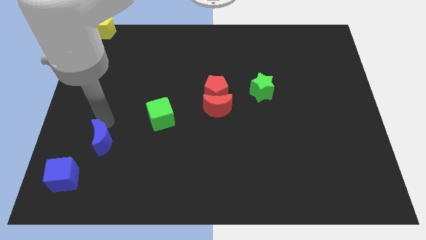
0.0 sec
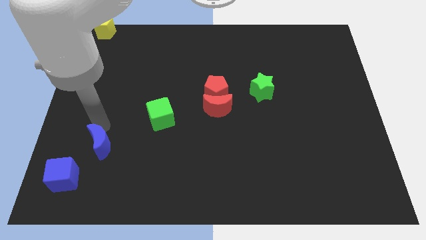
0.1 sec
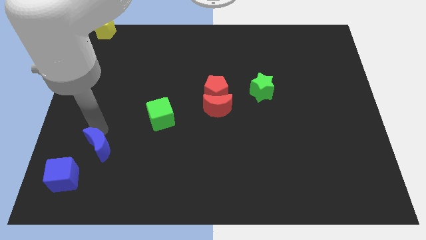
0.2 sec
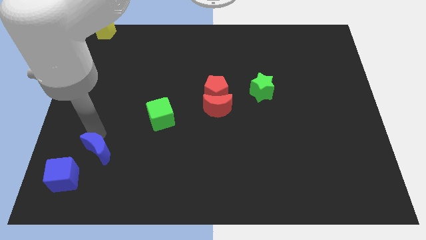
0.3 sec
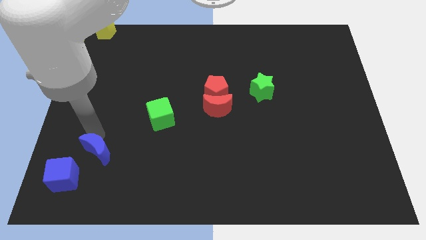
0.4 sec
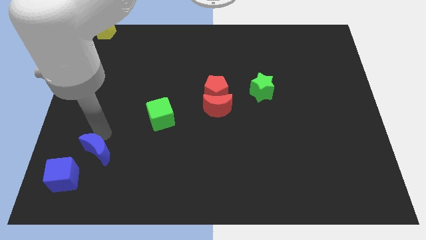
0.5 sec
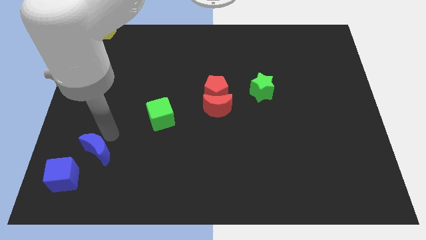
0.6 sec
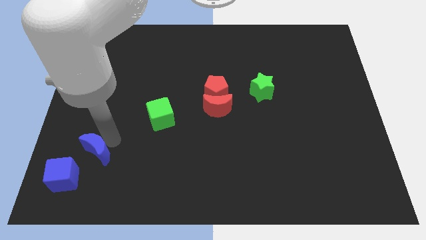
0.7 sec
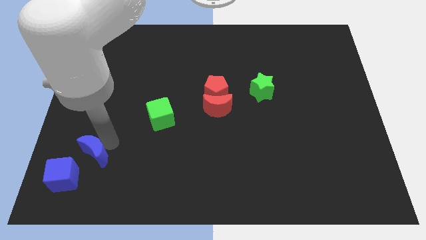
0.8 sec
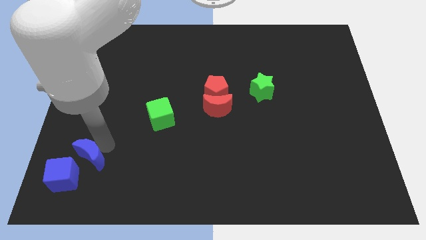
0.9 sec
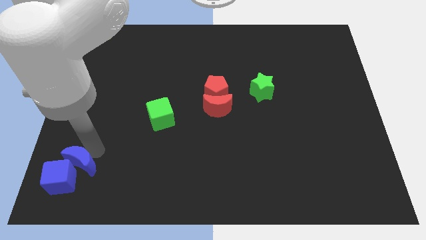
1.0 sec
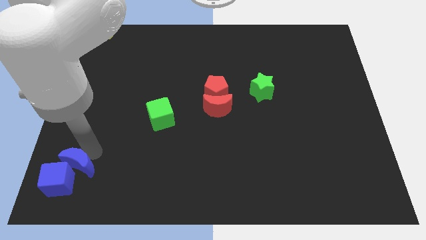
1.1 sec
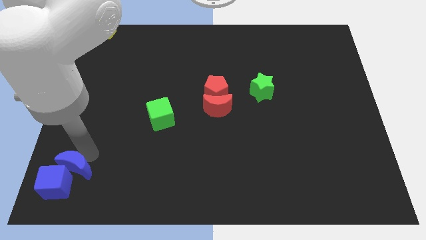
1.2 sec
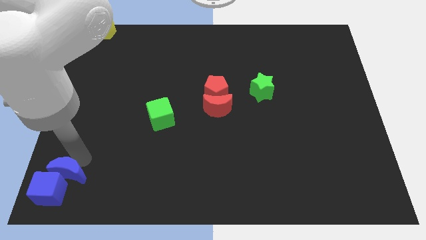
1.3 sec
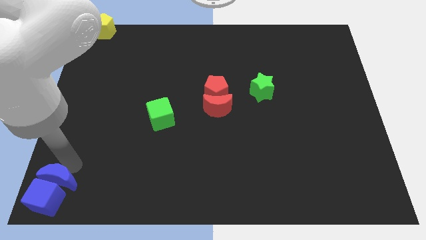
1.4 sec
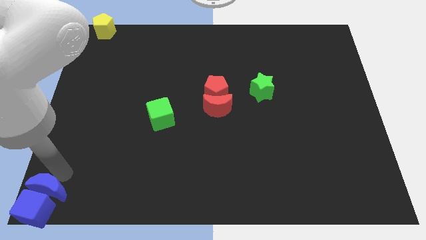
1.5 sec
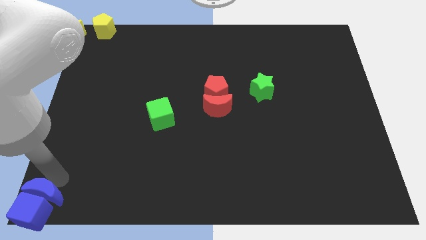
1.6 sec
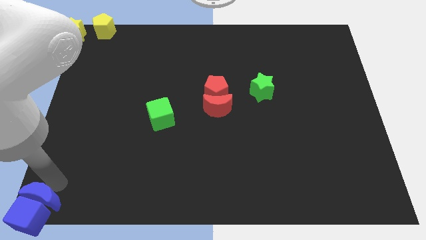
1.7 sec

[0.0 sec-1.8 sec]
put the blue blocks at the bottom left corner of the board

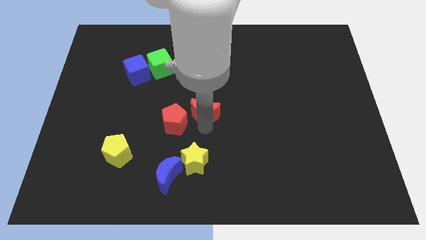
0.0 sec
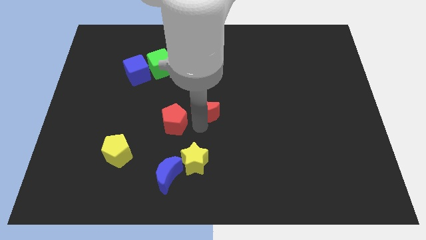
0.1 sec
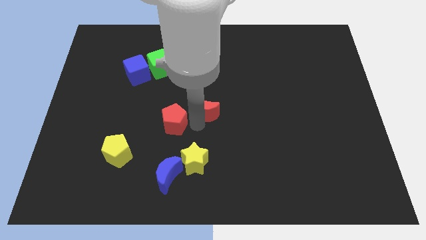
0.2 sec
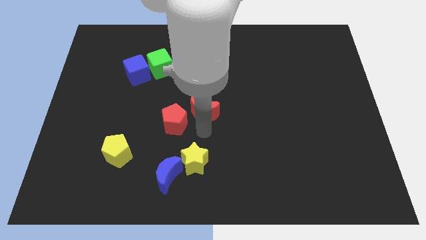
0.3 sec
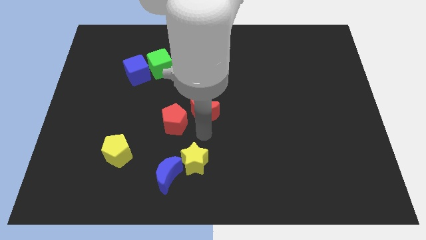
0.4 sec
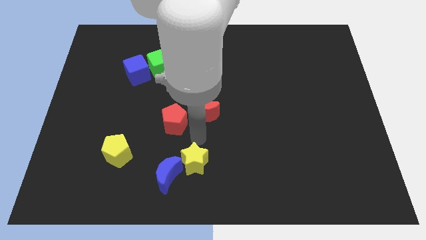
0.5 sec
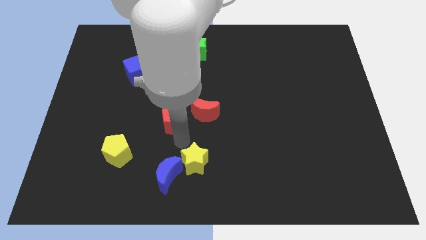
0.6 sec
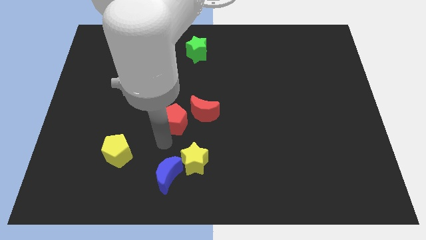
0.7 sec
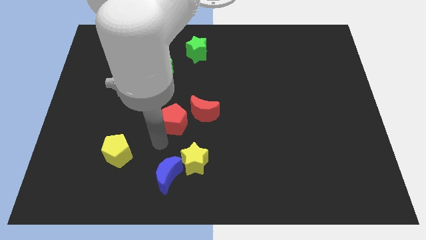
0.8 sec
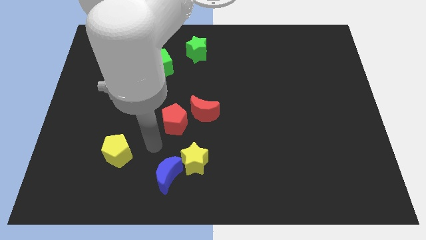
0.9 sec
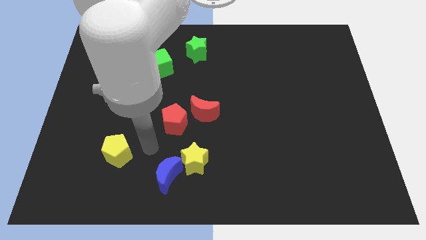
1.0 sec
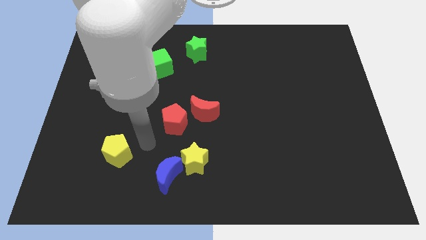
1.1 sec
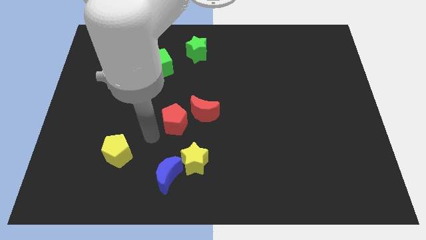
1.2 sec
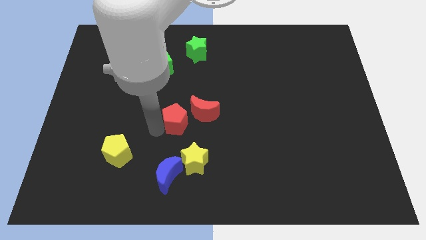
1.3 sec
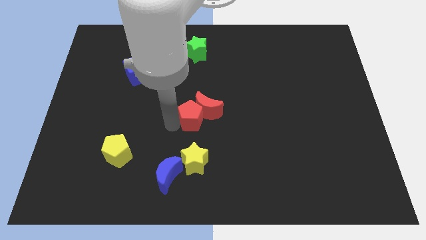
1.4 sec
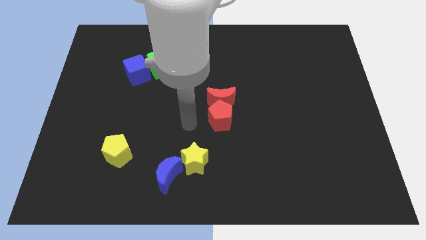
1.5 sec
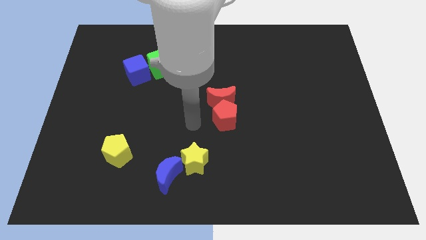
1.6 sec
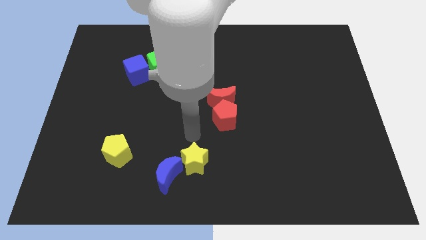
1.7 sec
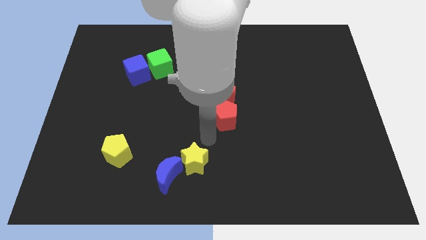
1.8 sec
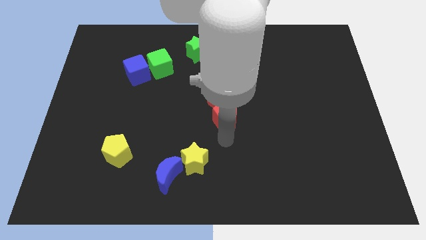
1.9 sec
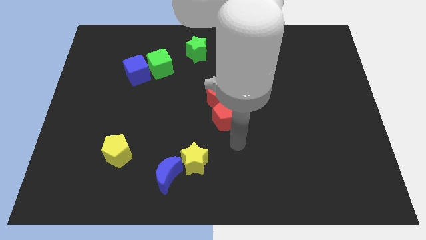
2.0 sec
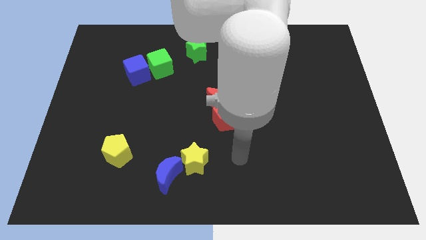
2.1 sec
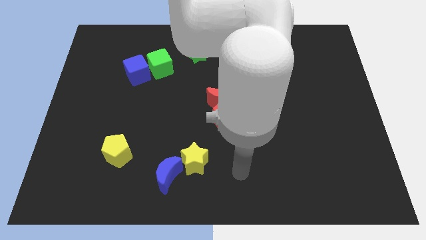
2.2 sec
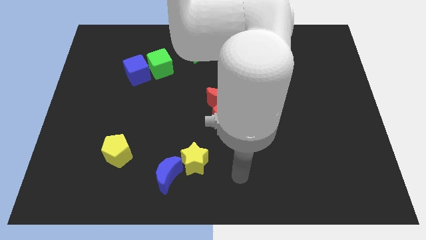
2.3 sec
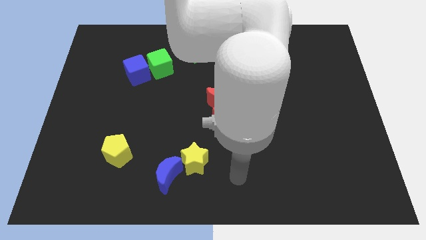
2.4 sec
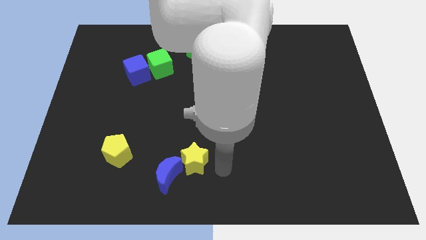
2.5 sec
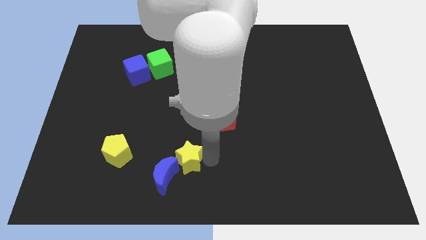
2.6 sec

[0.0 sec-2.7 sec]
push the red pentagon into the red moon

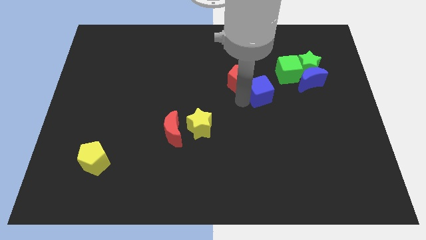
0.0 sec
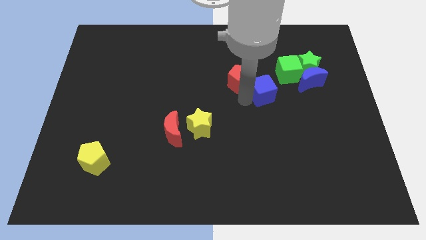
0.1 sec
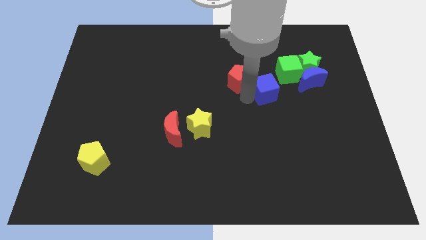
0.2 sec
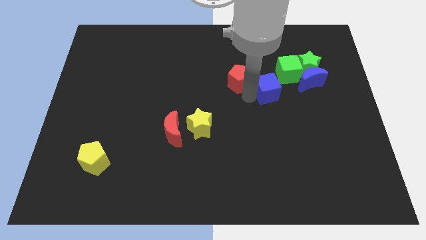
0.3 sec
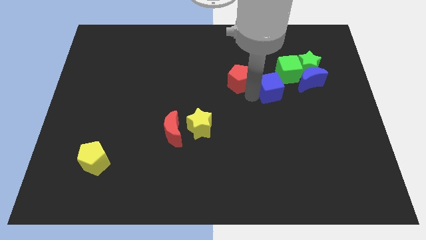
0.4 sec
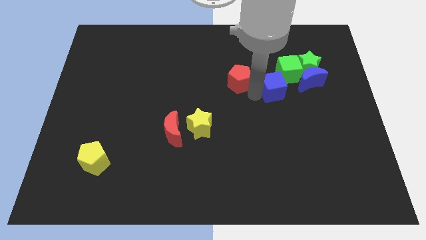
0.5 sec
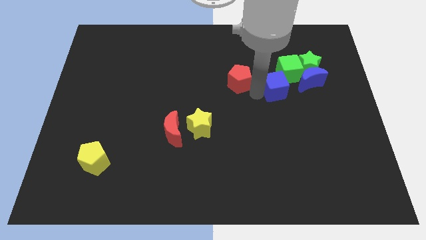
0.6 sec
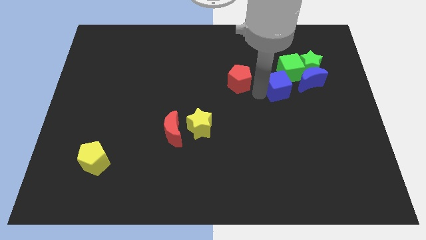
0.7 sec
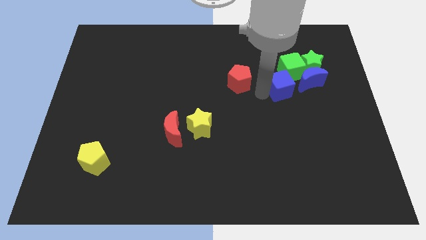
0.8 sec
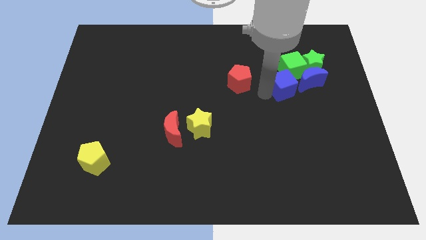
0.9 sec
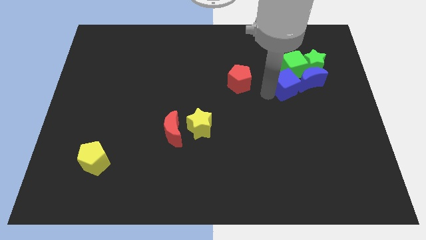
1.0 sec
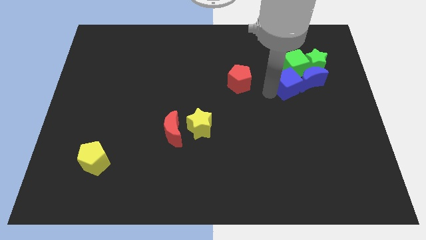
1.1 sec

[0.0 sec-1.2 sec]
push the blue cube into the group of blocks

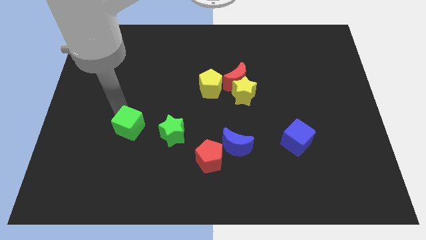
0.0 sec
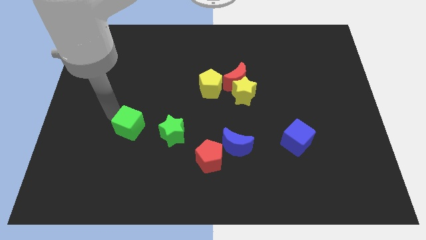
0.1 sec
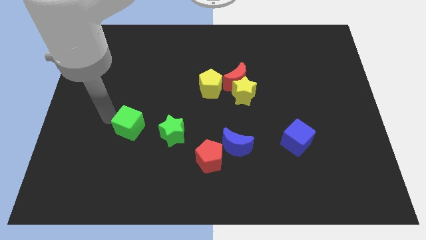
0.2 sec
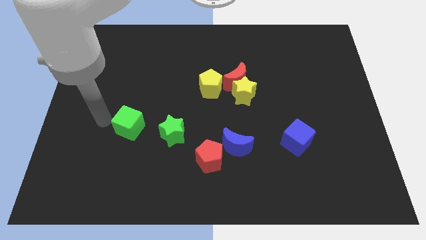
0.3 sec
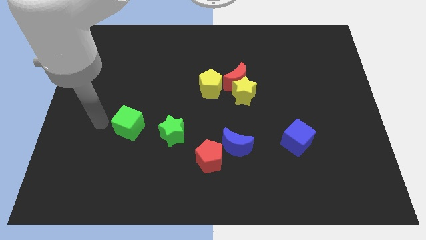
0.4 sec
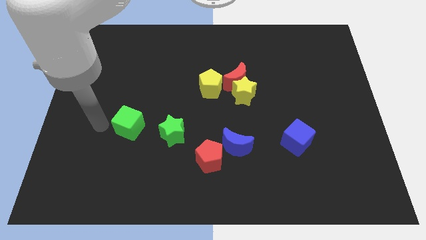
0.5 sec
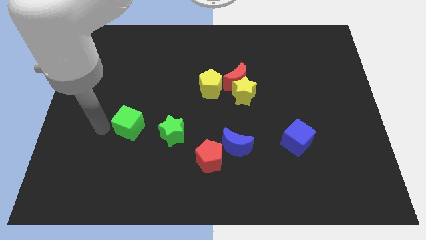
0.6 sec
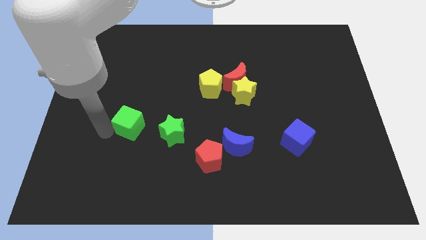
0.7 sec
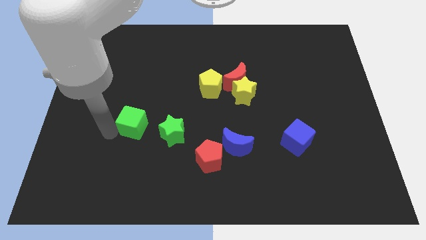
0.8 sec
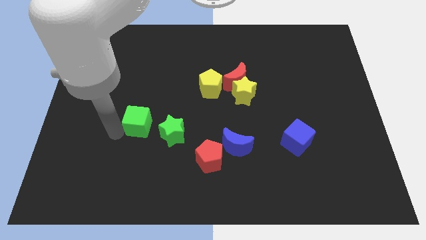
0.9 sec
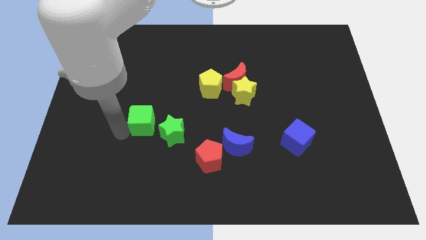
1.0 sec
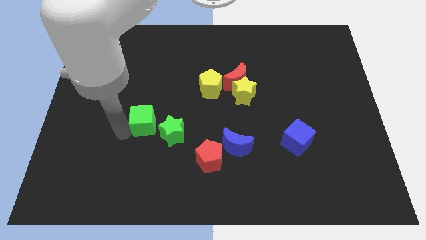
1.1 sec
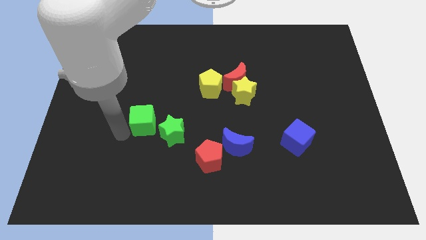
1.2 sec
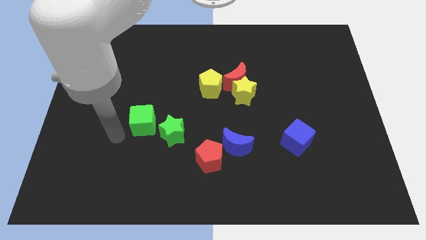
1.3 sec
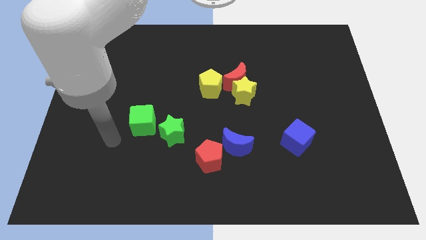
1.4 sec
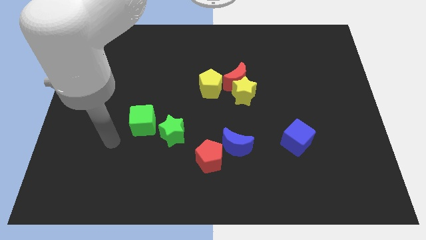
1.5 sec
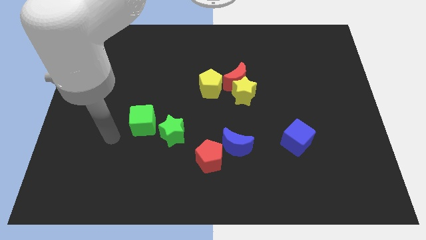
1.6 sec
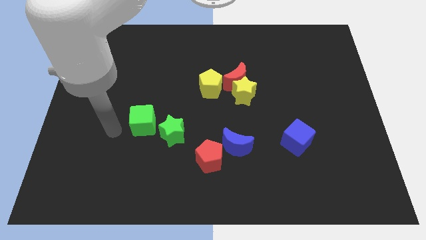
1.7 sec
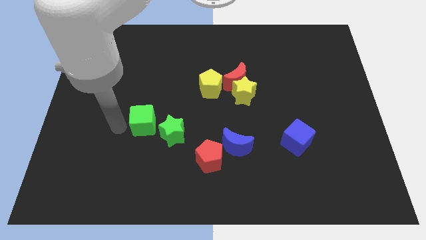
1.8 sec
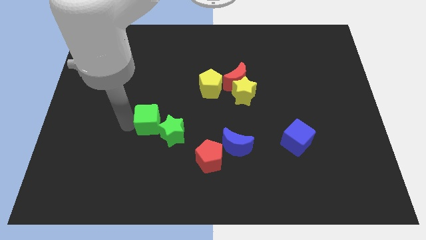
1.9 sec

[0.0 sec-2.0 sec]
push the green cube close left to the green star

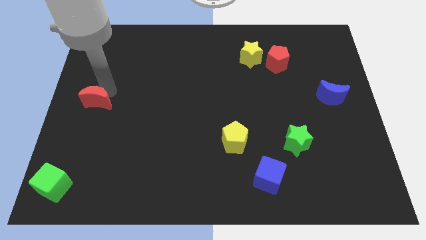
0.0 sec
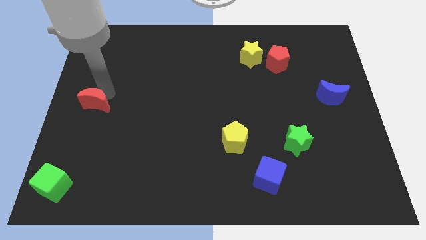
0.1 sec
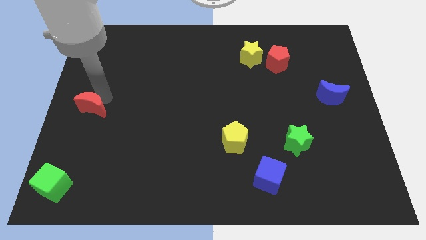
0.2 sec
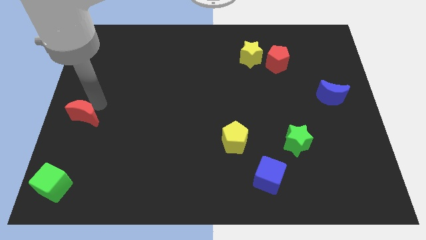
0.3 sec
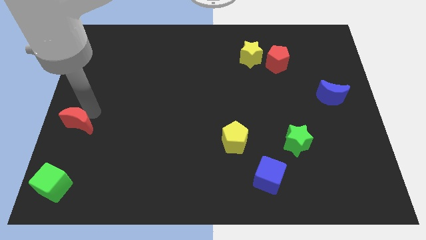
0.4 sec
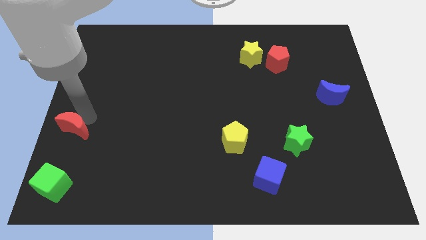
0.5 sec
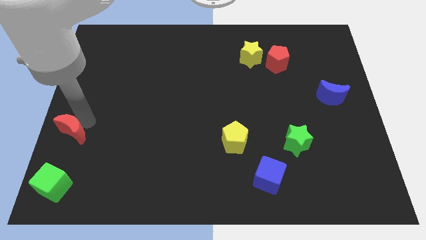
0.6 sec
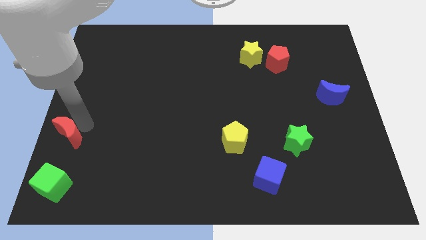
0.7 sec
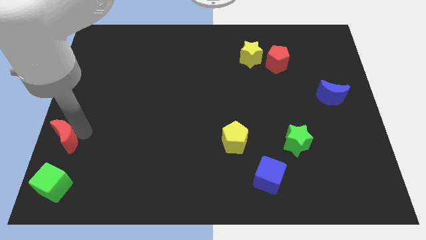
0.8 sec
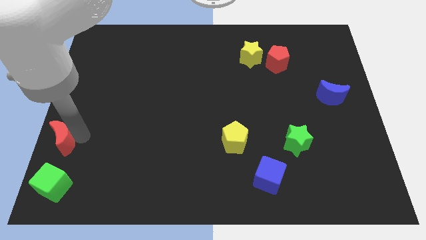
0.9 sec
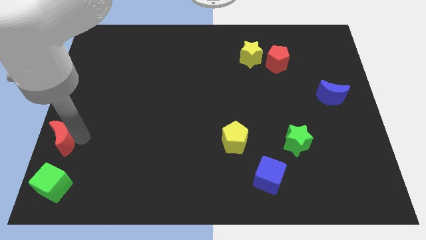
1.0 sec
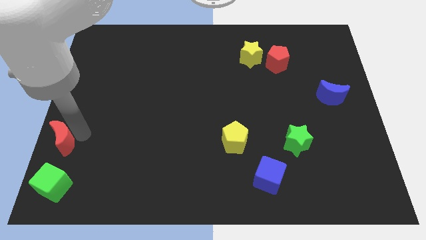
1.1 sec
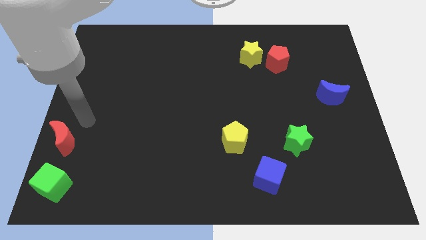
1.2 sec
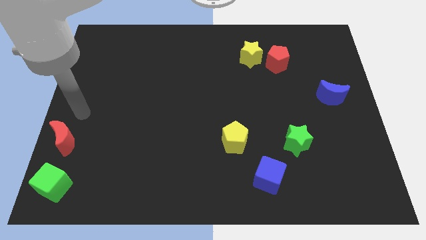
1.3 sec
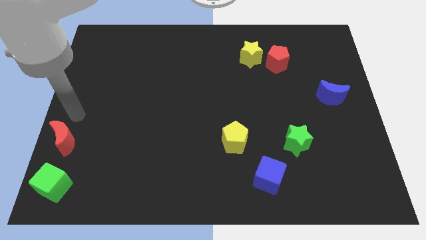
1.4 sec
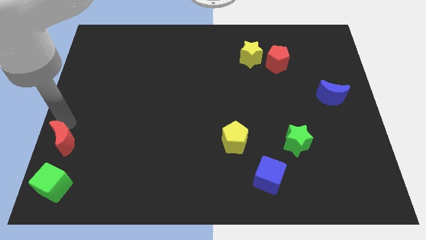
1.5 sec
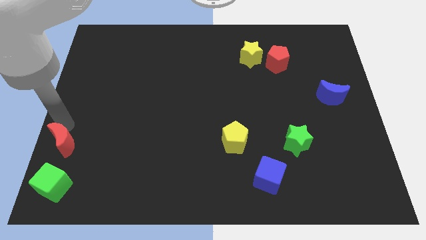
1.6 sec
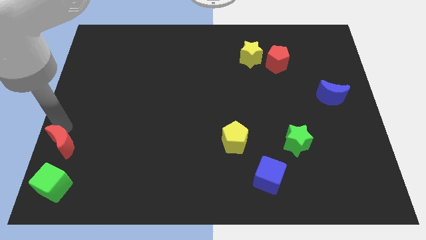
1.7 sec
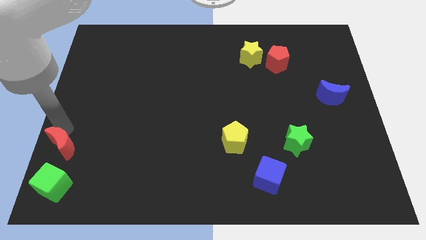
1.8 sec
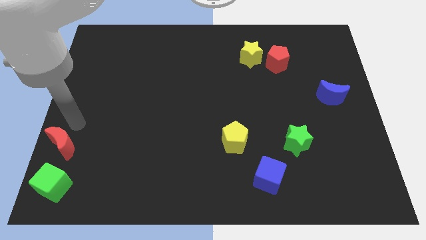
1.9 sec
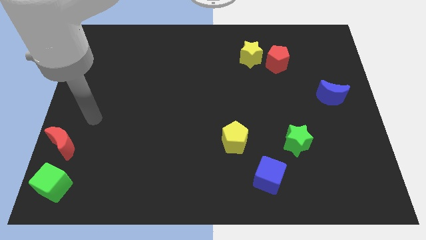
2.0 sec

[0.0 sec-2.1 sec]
move the red moon above the green cube
